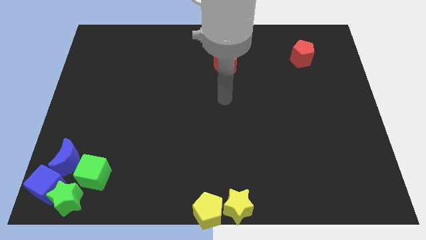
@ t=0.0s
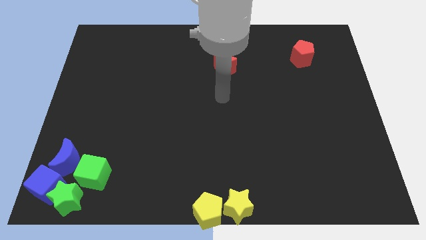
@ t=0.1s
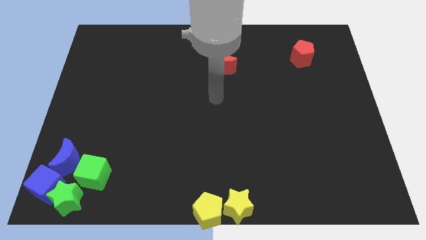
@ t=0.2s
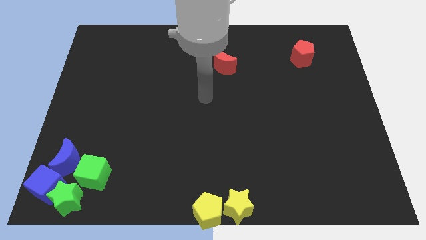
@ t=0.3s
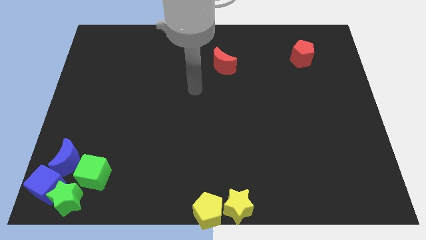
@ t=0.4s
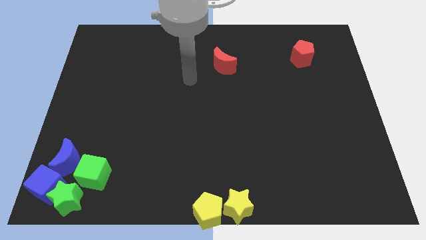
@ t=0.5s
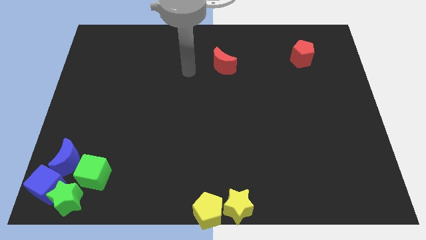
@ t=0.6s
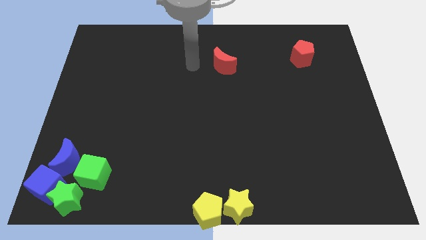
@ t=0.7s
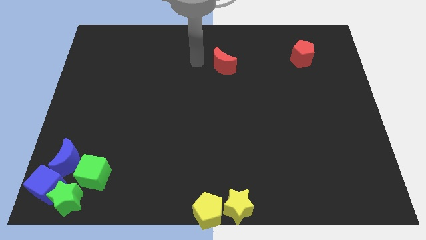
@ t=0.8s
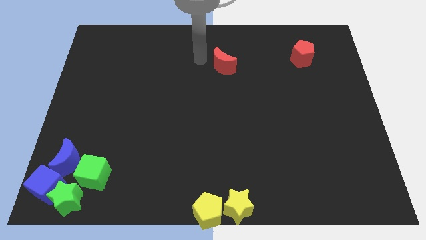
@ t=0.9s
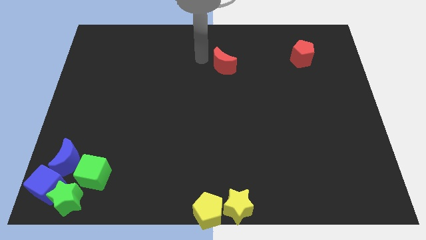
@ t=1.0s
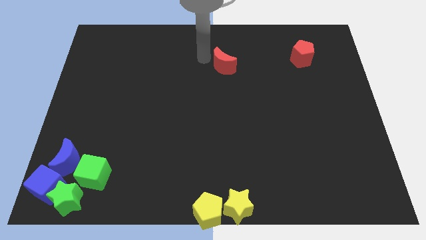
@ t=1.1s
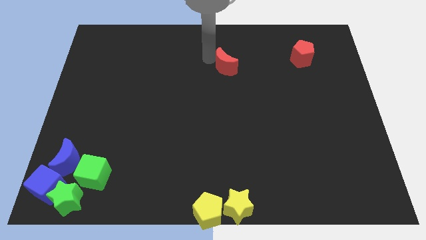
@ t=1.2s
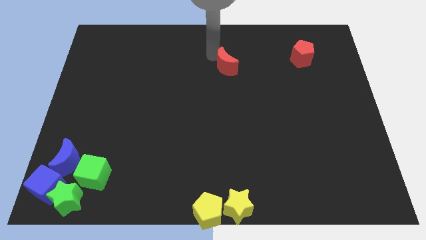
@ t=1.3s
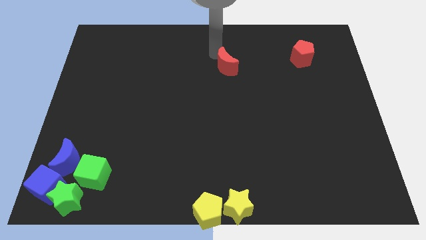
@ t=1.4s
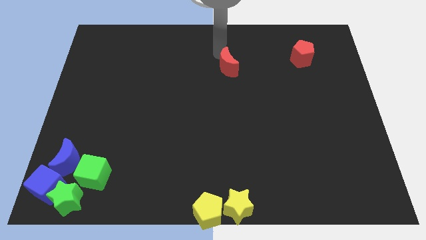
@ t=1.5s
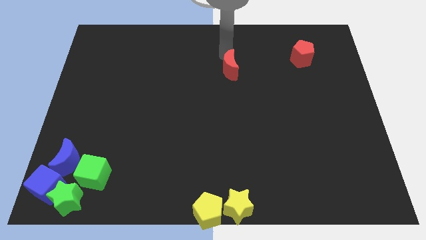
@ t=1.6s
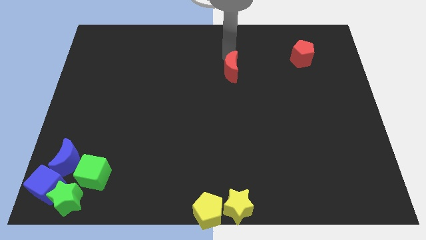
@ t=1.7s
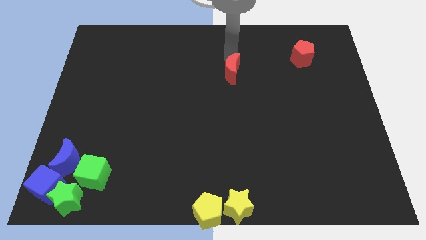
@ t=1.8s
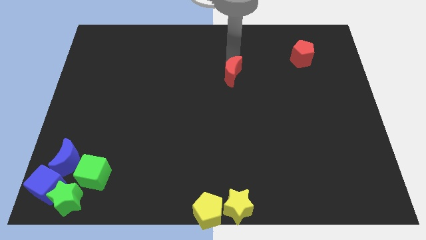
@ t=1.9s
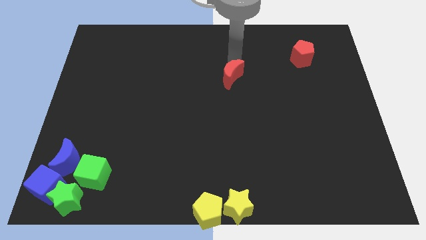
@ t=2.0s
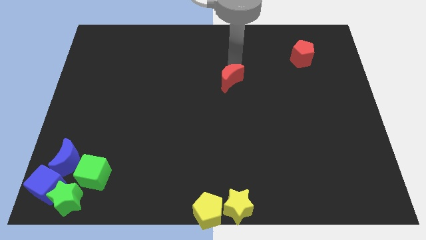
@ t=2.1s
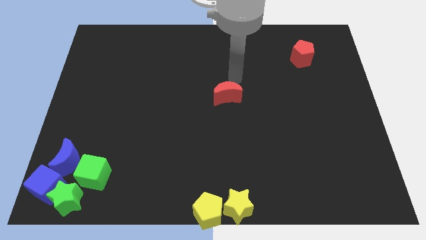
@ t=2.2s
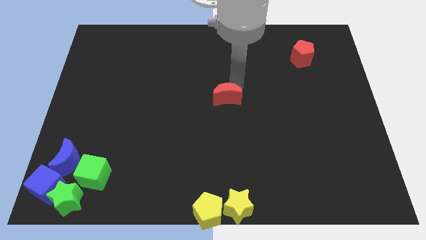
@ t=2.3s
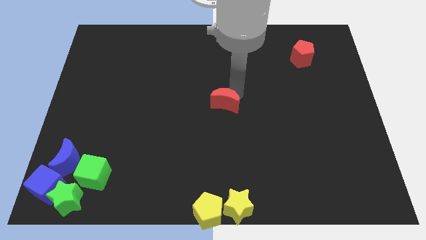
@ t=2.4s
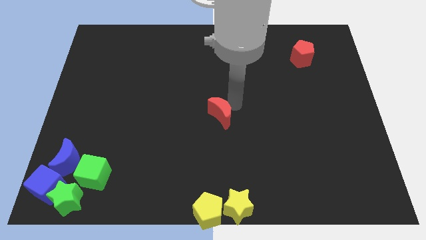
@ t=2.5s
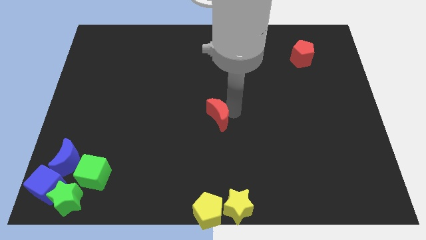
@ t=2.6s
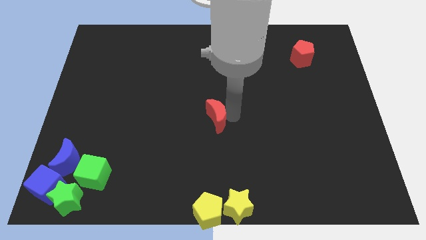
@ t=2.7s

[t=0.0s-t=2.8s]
move the red crescent to the center of the board

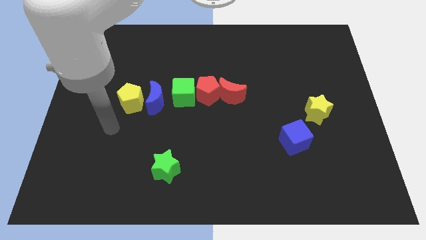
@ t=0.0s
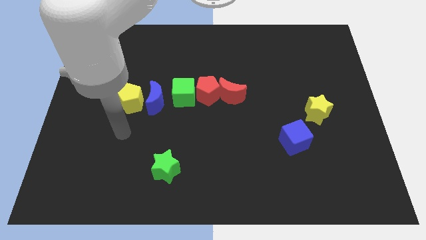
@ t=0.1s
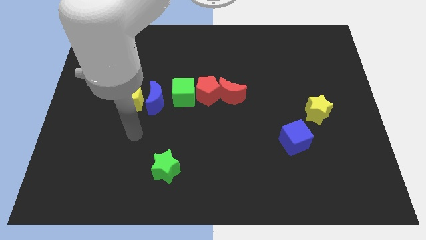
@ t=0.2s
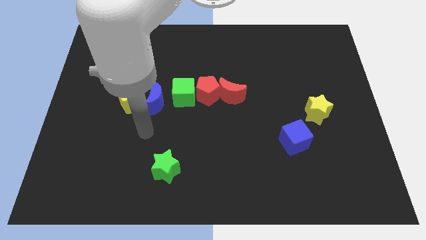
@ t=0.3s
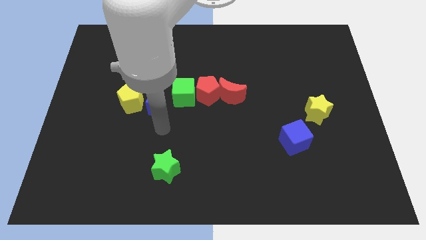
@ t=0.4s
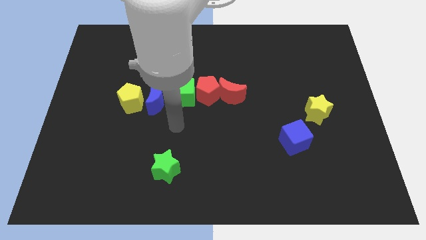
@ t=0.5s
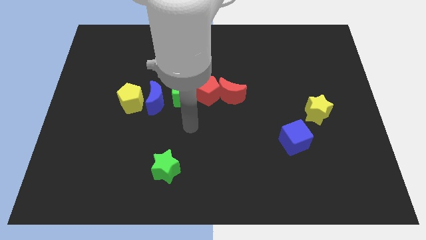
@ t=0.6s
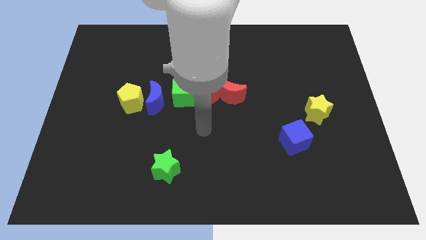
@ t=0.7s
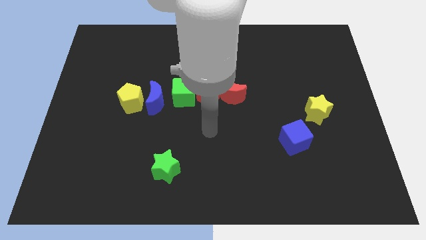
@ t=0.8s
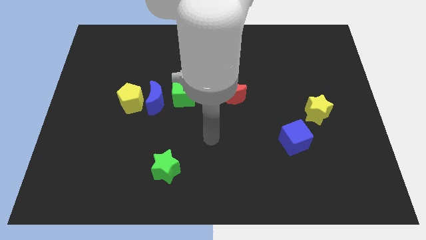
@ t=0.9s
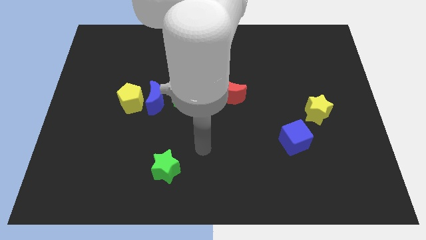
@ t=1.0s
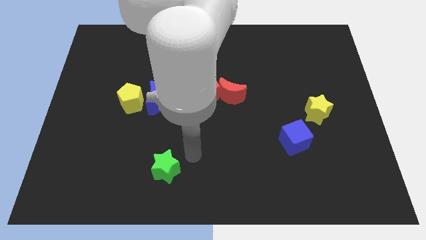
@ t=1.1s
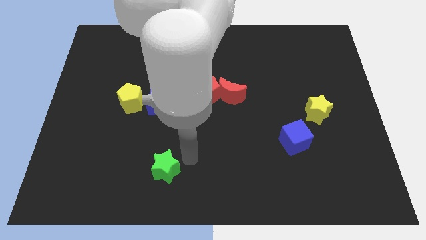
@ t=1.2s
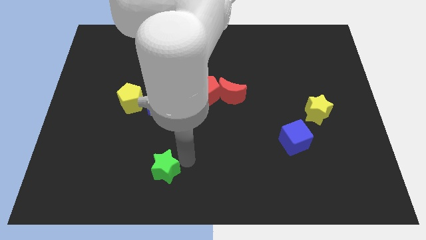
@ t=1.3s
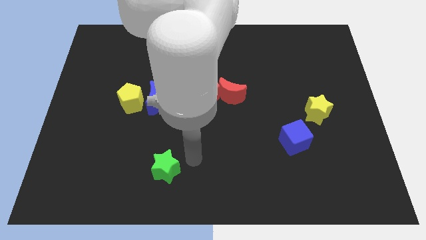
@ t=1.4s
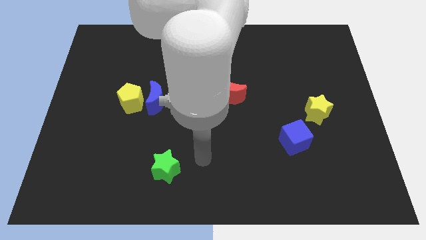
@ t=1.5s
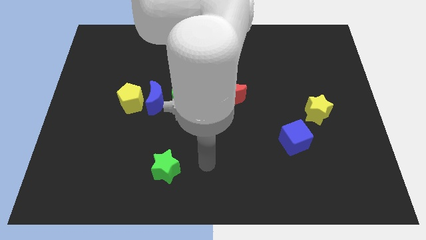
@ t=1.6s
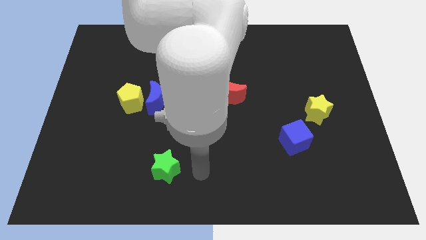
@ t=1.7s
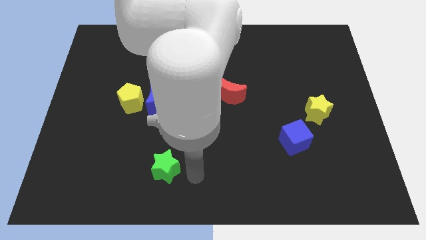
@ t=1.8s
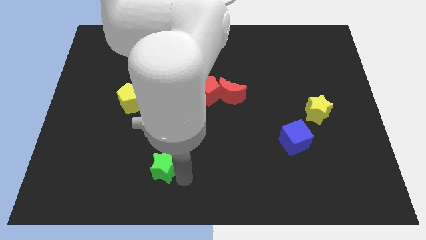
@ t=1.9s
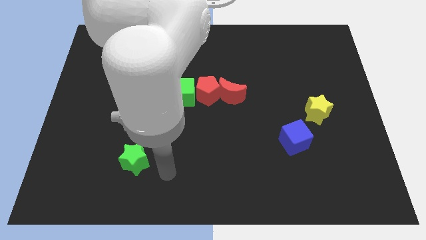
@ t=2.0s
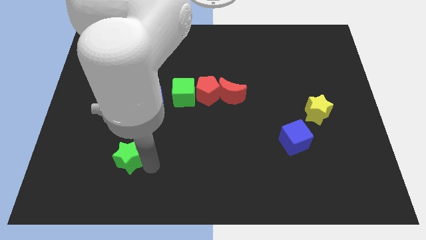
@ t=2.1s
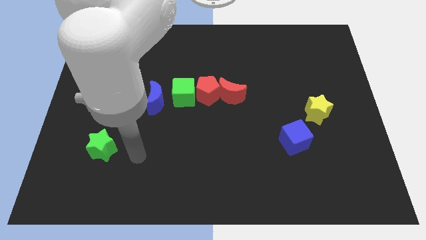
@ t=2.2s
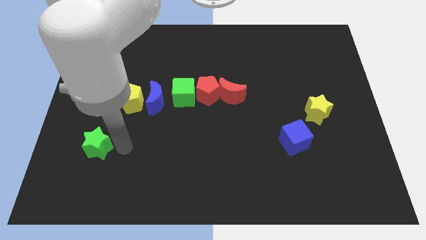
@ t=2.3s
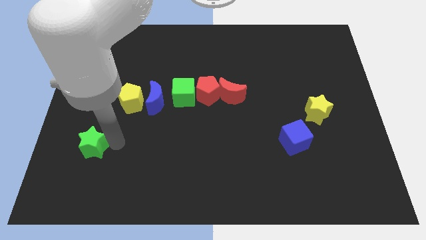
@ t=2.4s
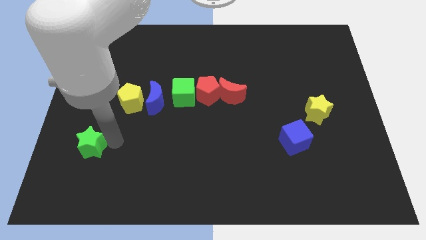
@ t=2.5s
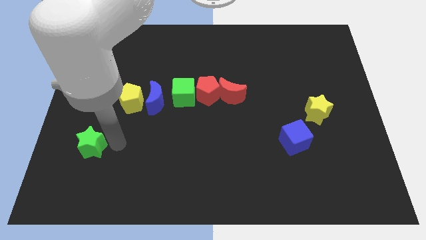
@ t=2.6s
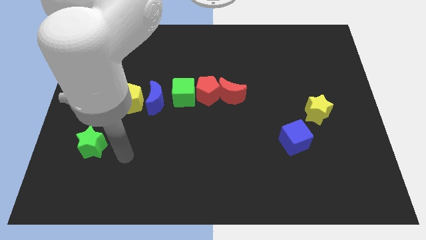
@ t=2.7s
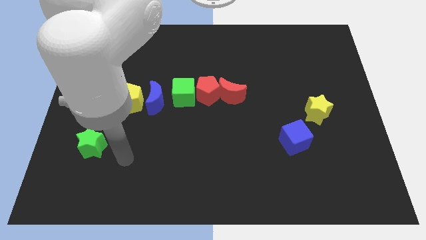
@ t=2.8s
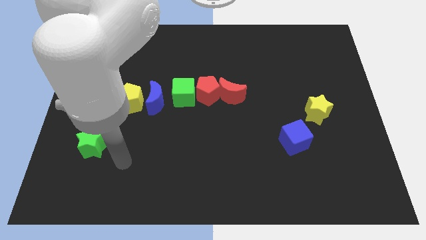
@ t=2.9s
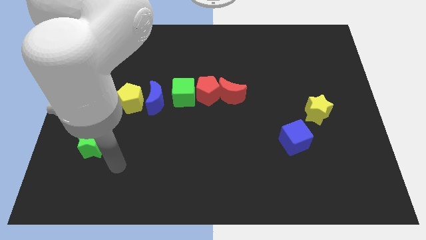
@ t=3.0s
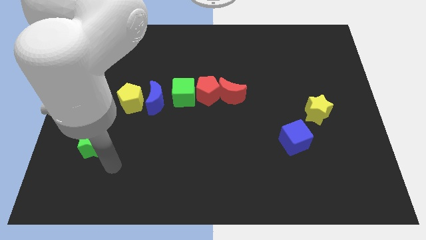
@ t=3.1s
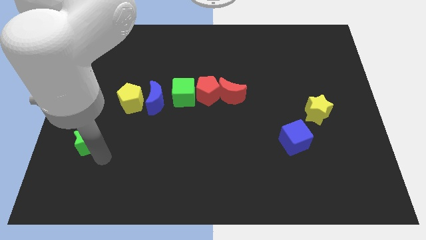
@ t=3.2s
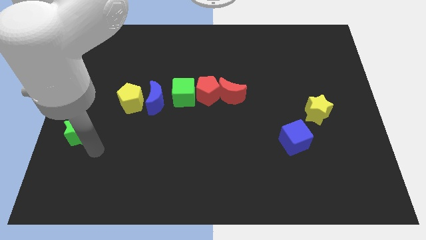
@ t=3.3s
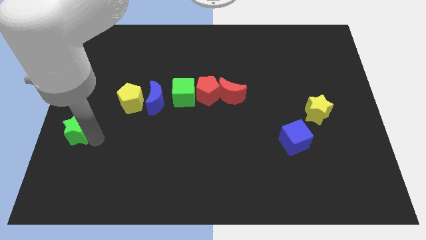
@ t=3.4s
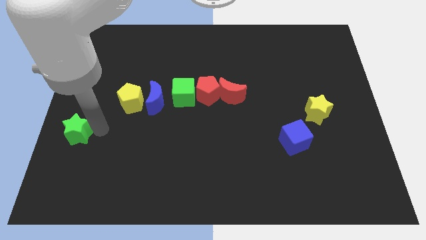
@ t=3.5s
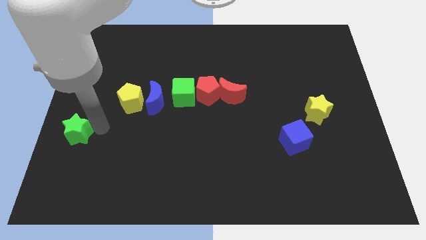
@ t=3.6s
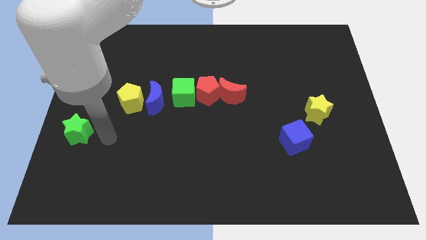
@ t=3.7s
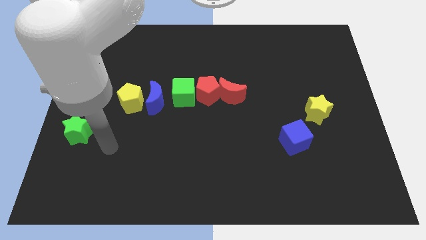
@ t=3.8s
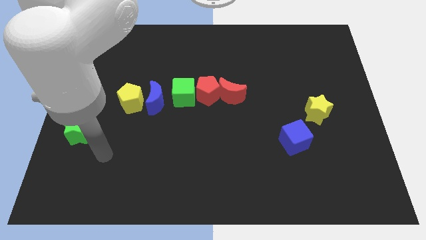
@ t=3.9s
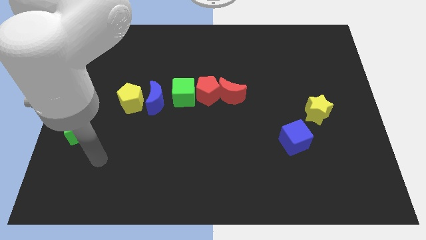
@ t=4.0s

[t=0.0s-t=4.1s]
push green star towards the left center of the board

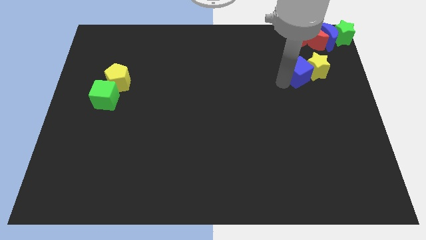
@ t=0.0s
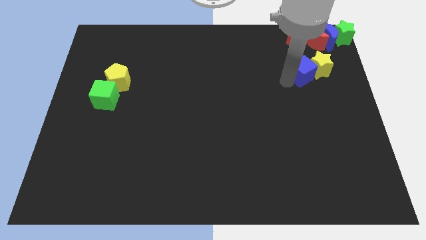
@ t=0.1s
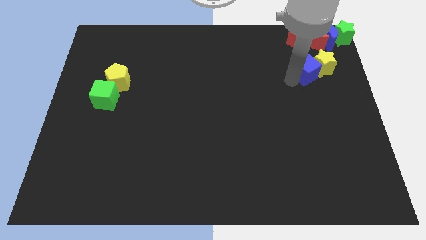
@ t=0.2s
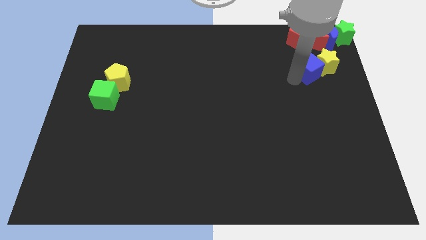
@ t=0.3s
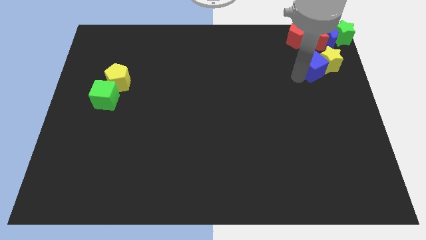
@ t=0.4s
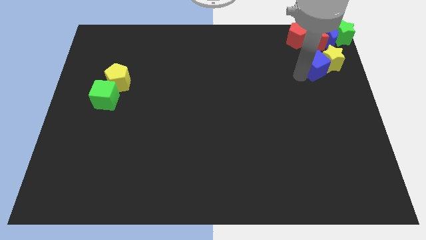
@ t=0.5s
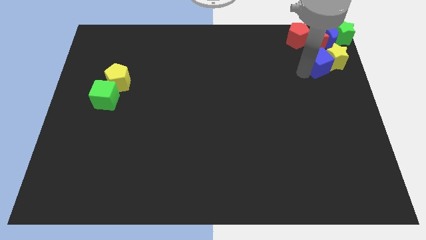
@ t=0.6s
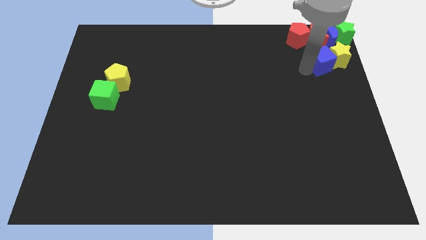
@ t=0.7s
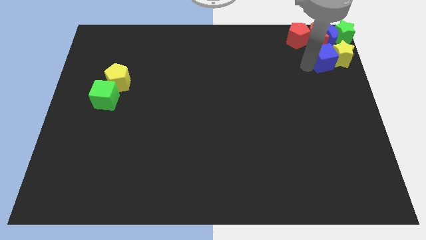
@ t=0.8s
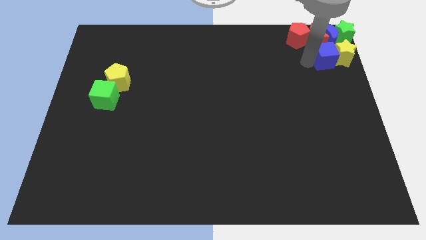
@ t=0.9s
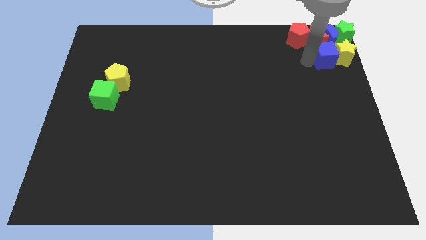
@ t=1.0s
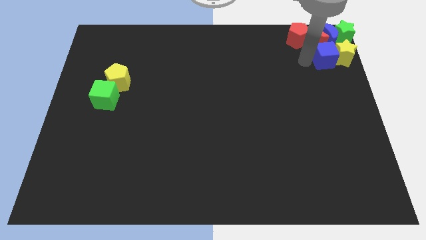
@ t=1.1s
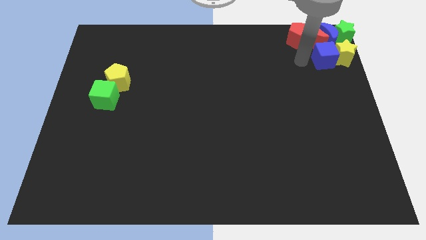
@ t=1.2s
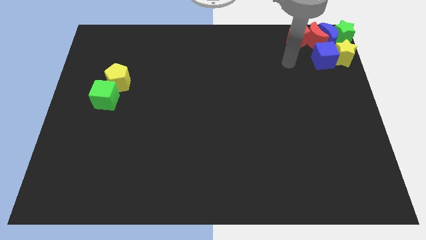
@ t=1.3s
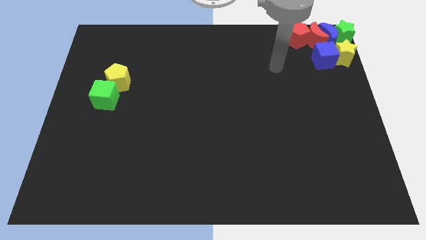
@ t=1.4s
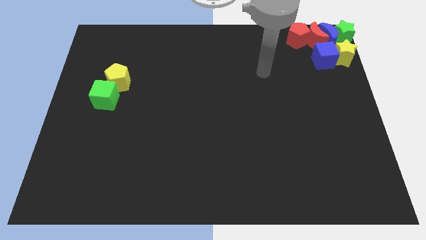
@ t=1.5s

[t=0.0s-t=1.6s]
push the blue cube and the yellow star to the top right corner

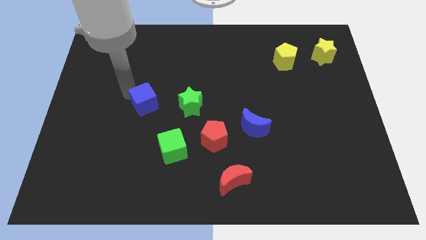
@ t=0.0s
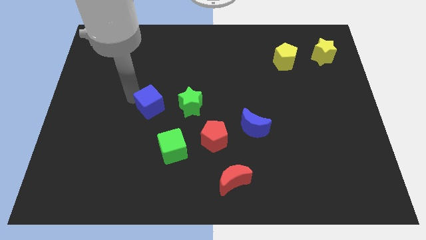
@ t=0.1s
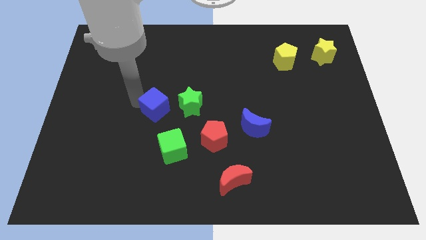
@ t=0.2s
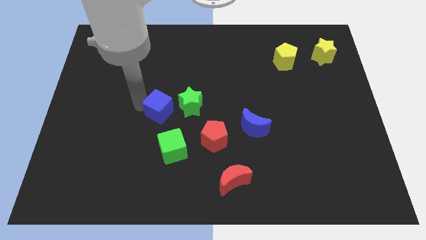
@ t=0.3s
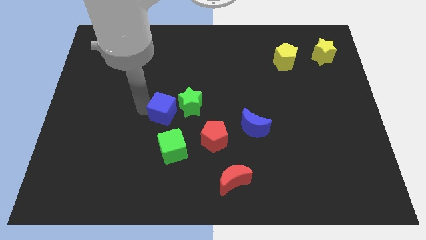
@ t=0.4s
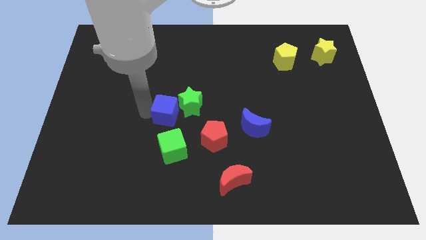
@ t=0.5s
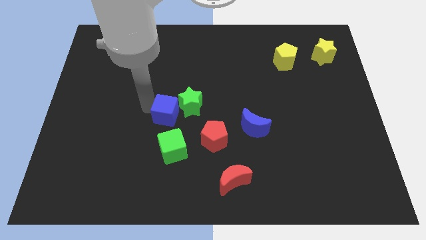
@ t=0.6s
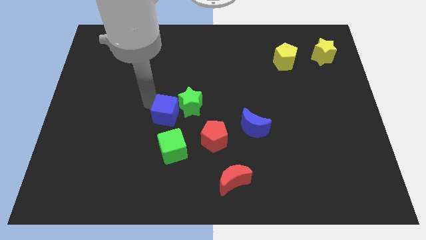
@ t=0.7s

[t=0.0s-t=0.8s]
place the blue cube above the green cube
